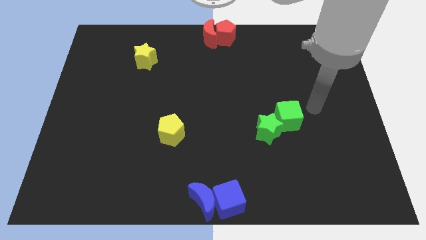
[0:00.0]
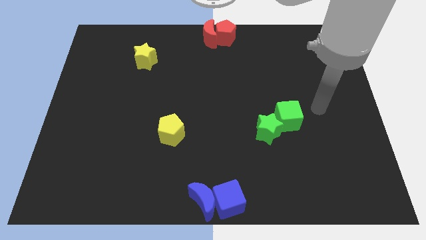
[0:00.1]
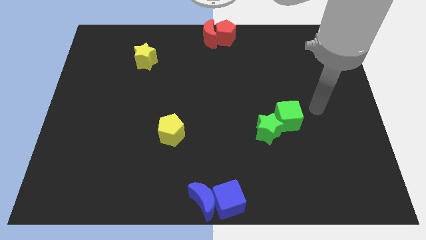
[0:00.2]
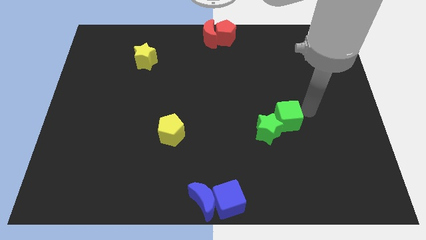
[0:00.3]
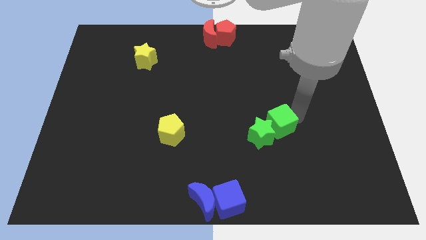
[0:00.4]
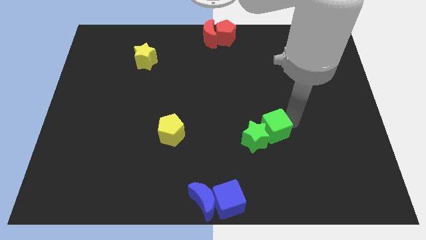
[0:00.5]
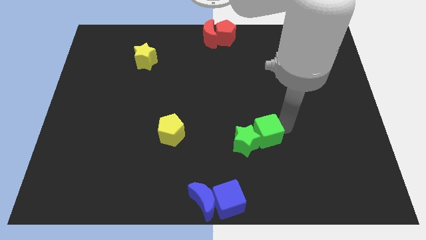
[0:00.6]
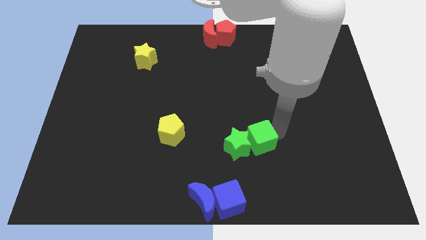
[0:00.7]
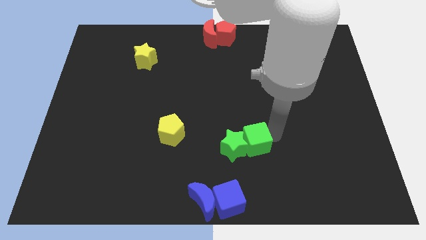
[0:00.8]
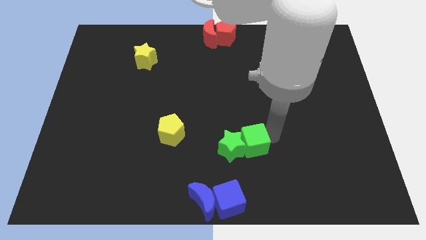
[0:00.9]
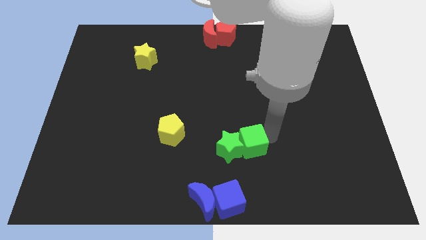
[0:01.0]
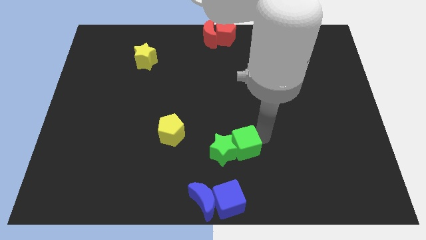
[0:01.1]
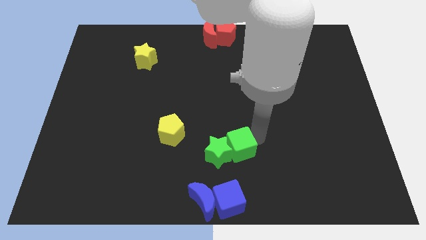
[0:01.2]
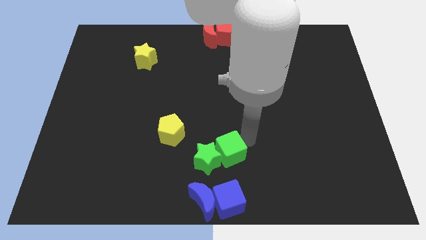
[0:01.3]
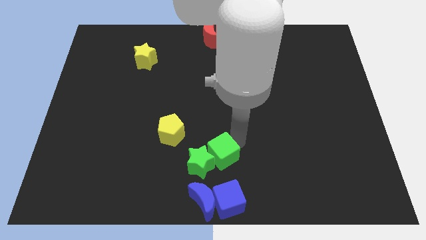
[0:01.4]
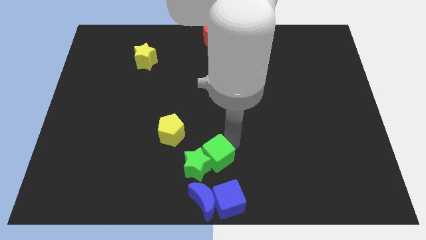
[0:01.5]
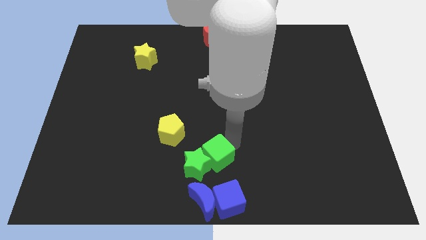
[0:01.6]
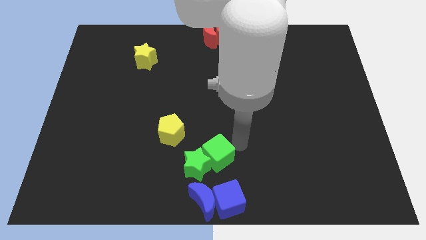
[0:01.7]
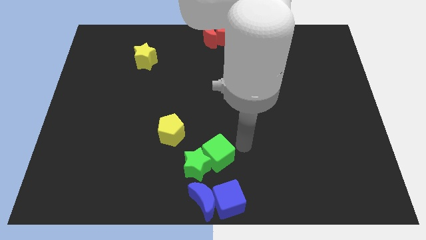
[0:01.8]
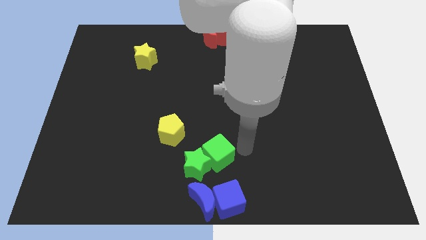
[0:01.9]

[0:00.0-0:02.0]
push the green star along with the green cube towards the bottom center

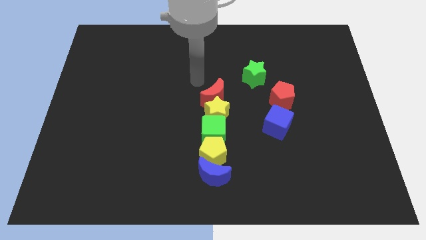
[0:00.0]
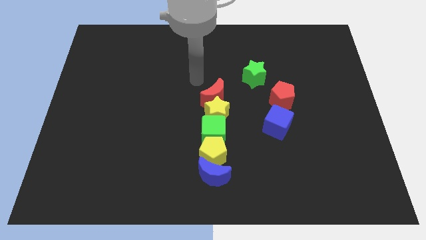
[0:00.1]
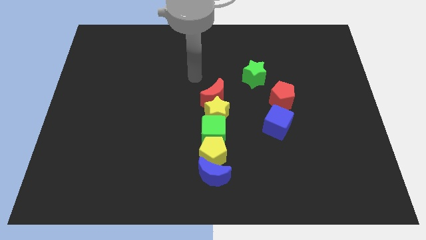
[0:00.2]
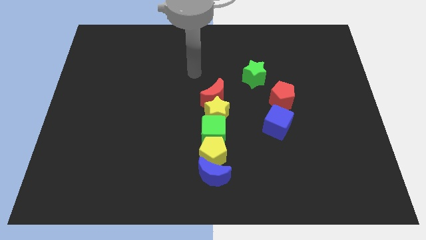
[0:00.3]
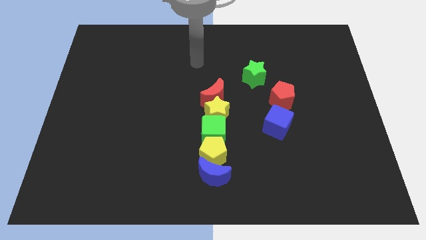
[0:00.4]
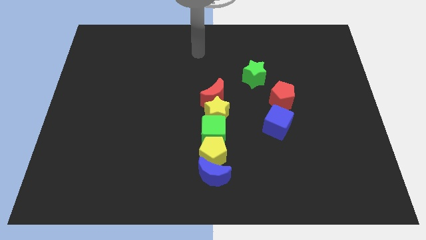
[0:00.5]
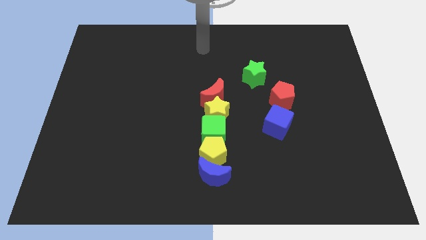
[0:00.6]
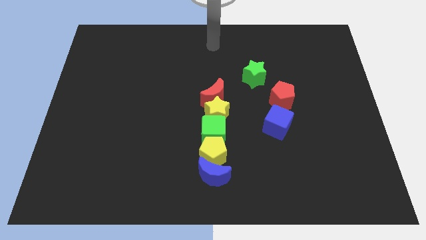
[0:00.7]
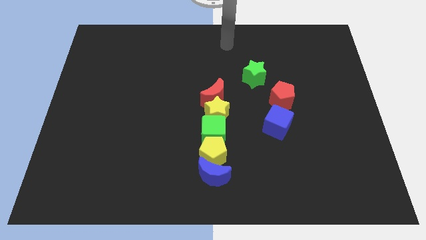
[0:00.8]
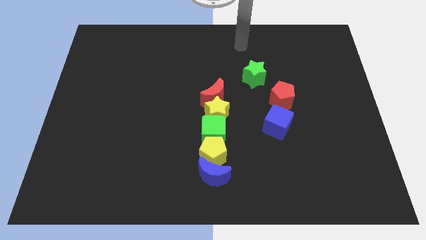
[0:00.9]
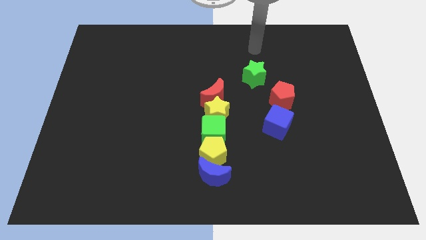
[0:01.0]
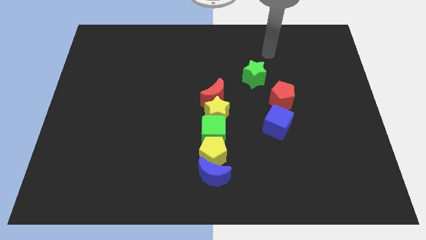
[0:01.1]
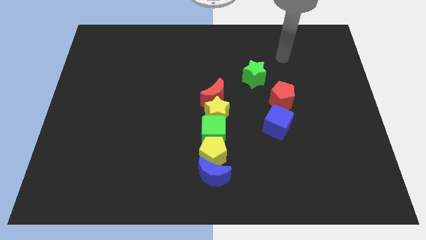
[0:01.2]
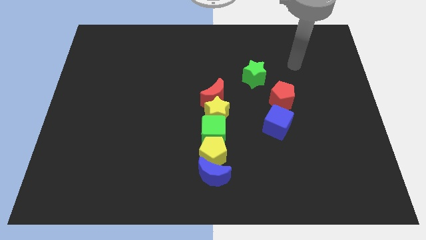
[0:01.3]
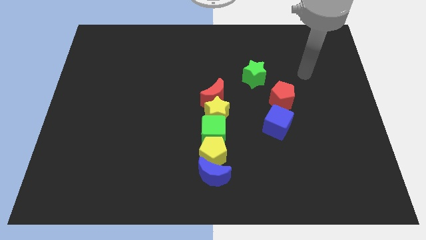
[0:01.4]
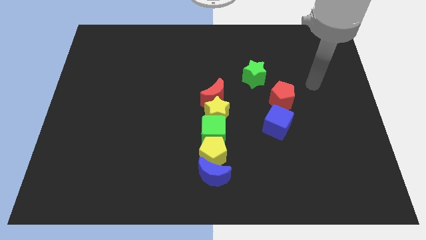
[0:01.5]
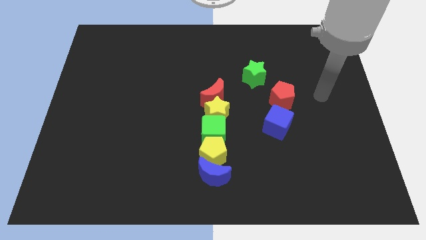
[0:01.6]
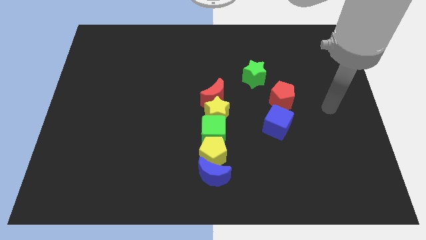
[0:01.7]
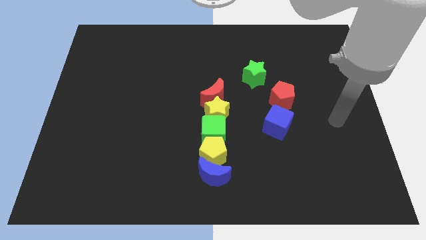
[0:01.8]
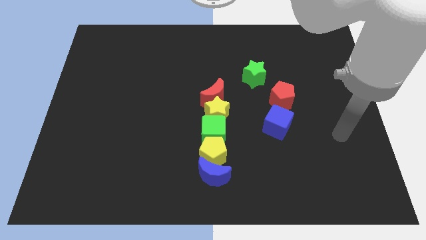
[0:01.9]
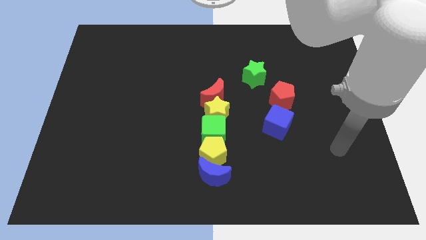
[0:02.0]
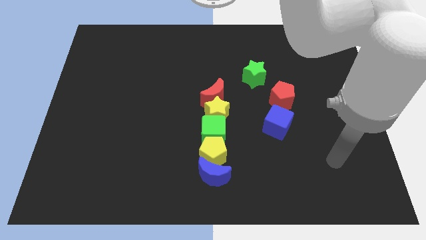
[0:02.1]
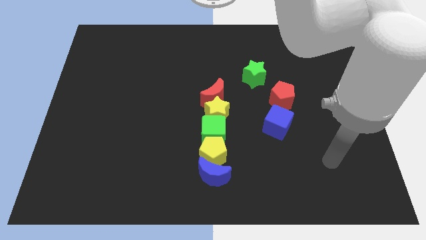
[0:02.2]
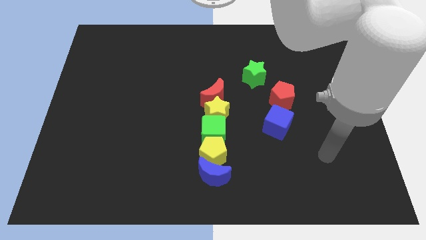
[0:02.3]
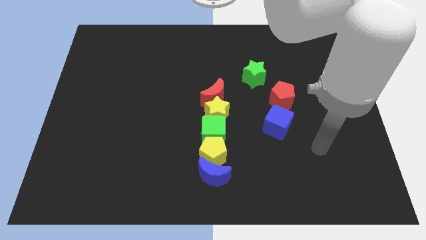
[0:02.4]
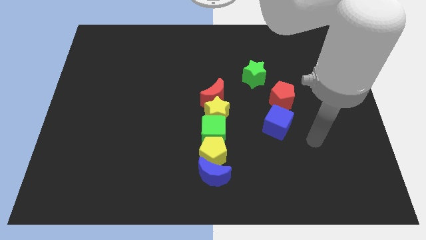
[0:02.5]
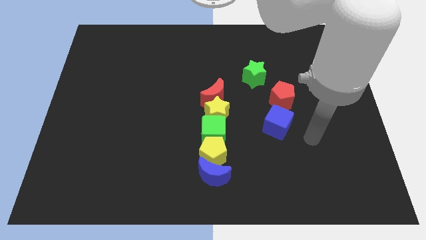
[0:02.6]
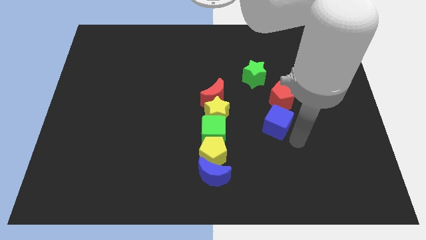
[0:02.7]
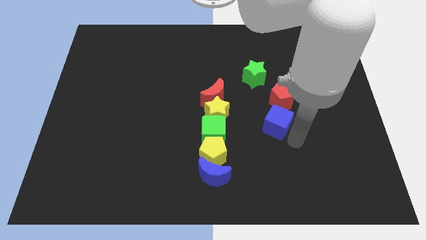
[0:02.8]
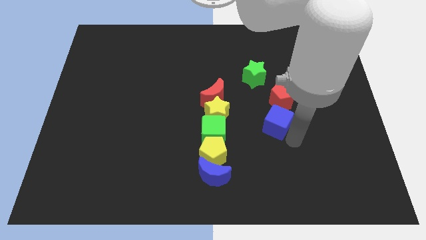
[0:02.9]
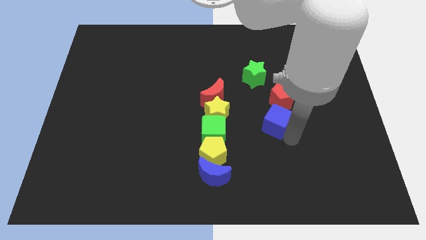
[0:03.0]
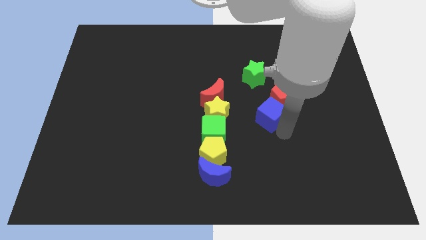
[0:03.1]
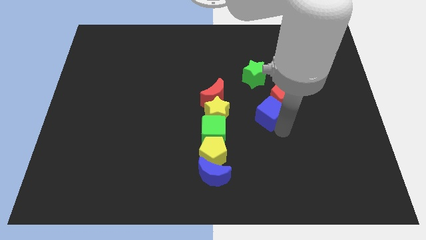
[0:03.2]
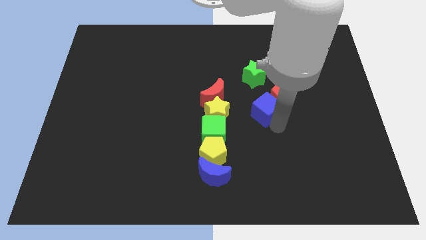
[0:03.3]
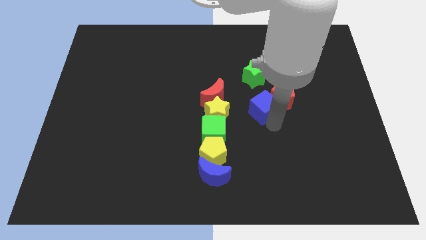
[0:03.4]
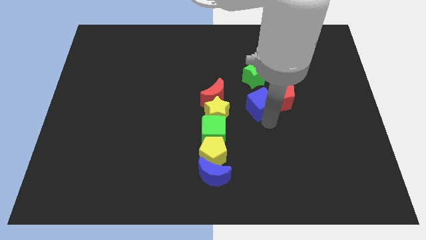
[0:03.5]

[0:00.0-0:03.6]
move the arm away from the red moon

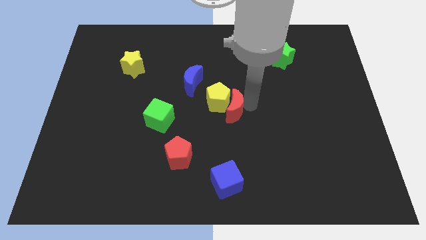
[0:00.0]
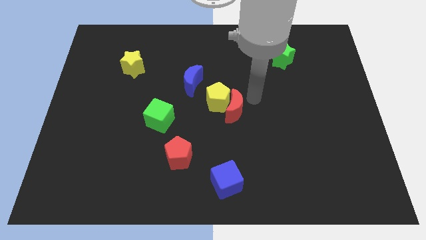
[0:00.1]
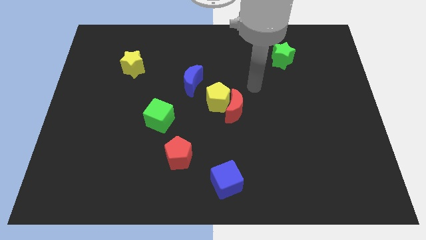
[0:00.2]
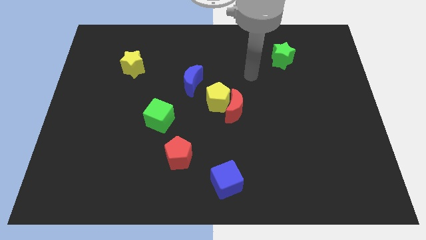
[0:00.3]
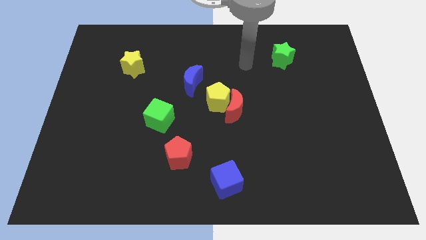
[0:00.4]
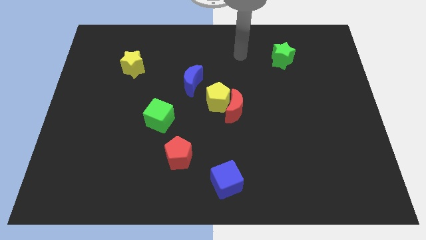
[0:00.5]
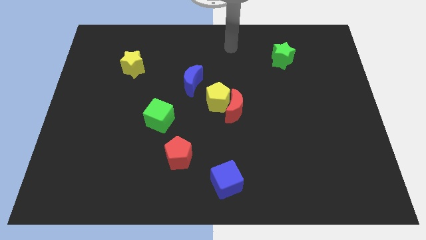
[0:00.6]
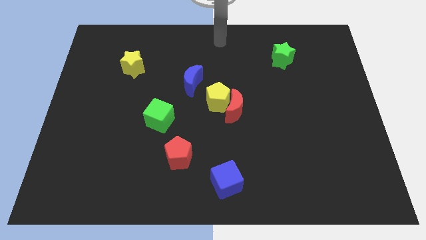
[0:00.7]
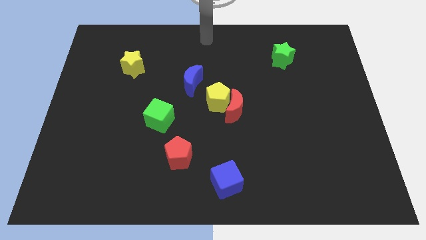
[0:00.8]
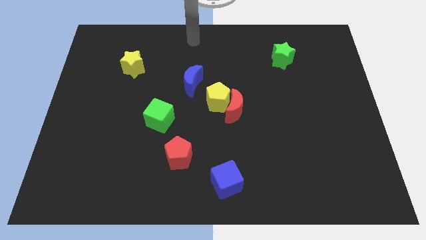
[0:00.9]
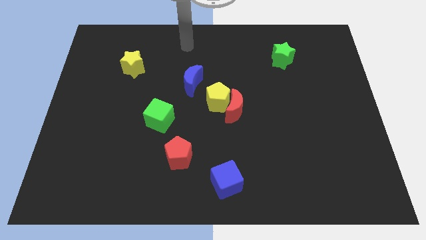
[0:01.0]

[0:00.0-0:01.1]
move your arm away from the red crecent

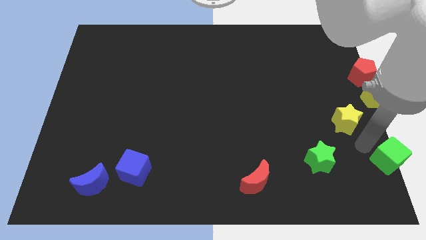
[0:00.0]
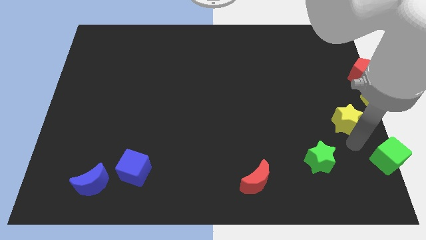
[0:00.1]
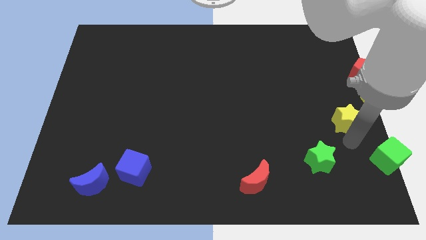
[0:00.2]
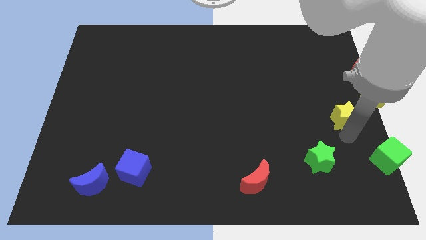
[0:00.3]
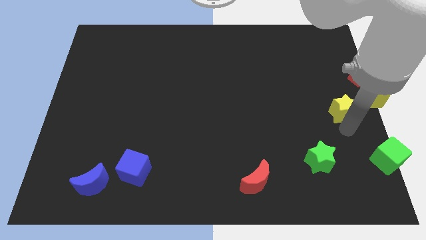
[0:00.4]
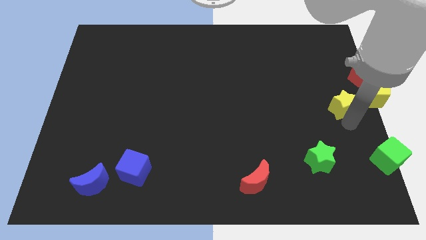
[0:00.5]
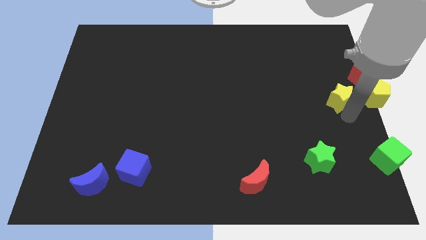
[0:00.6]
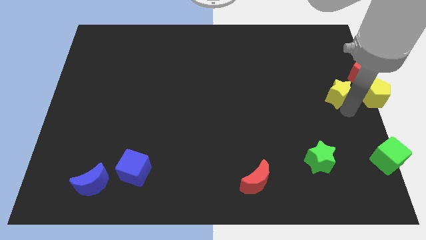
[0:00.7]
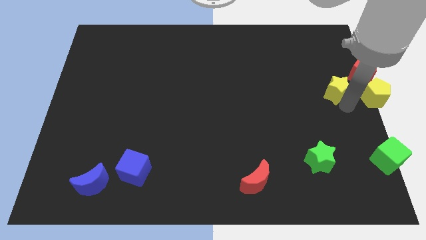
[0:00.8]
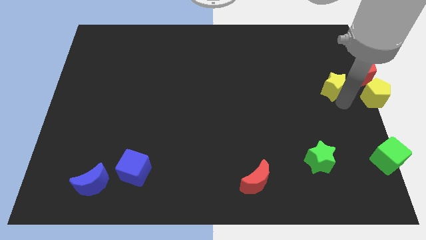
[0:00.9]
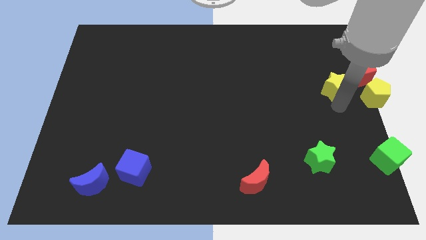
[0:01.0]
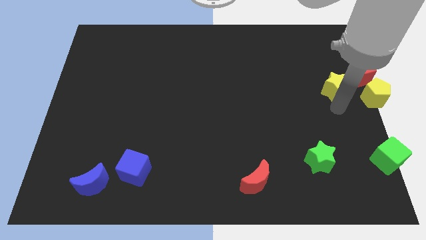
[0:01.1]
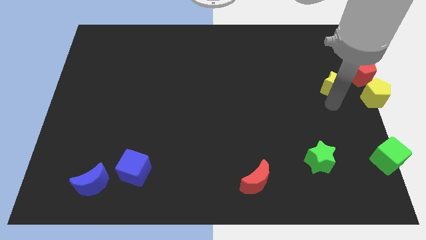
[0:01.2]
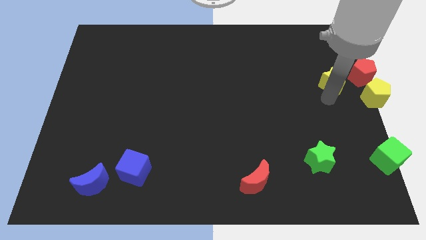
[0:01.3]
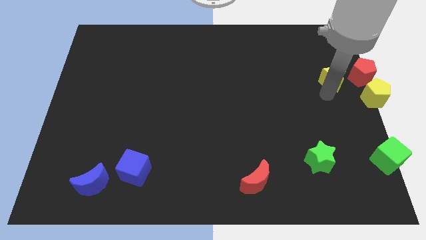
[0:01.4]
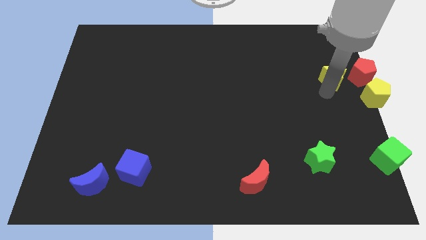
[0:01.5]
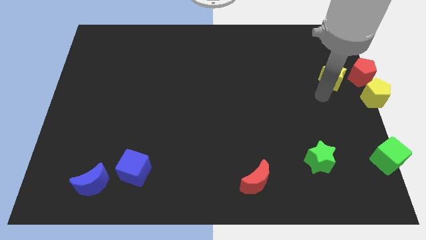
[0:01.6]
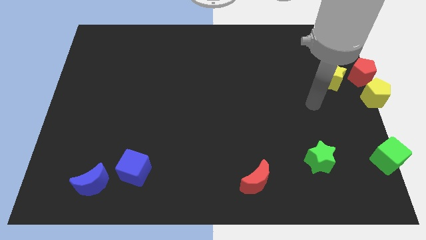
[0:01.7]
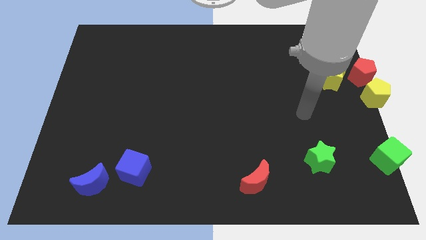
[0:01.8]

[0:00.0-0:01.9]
move the yellow star to the left side of the red pentagon

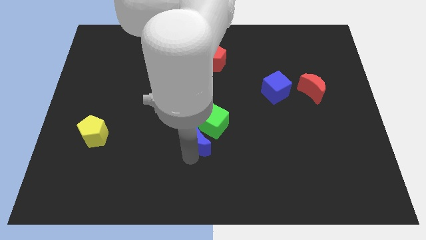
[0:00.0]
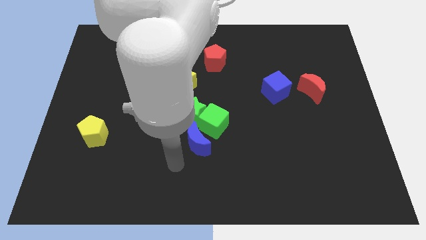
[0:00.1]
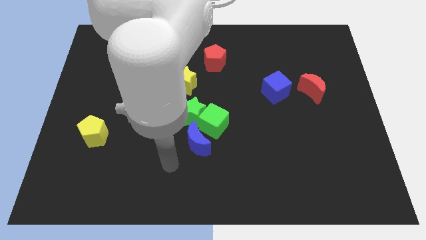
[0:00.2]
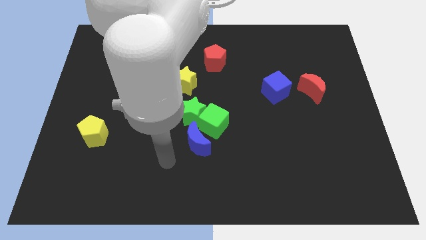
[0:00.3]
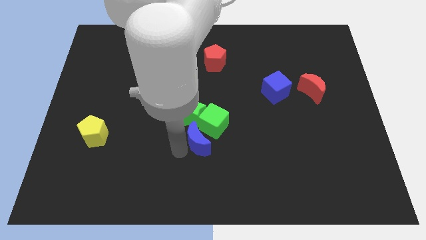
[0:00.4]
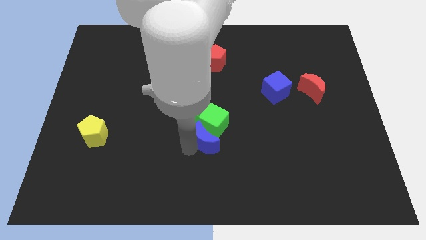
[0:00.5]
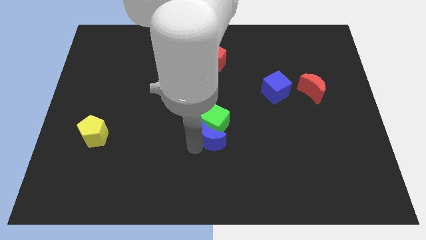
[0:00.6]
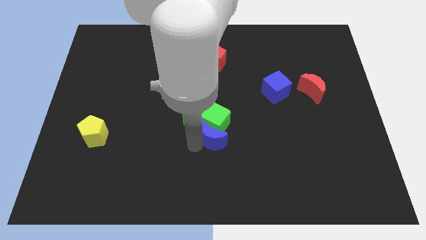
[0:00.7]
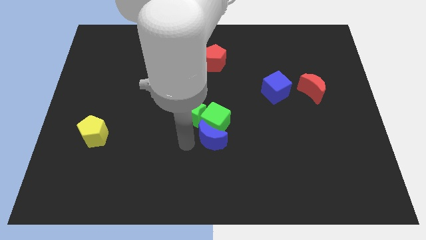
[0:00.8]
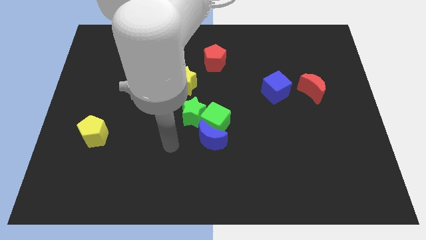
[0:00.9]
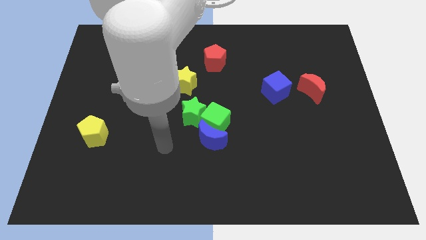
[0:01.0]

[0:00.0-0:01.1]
push the blue moon into green cube
